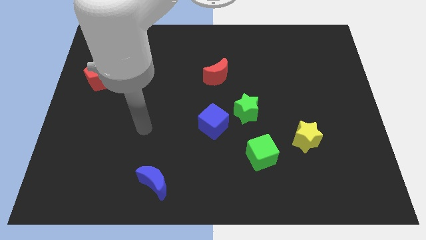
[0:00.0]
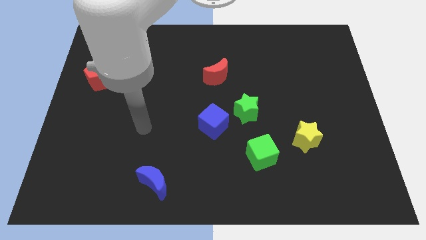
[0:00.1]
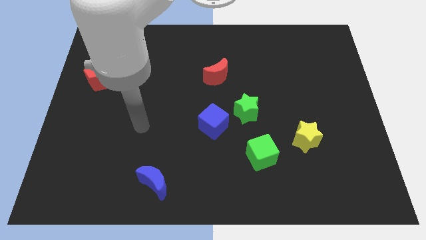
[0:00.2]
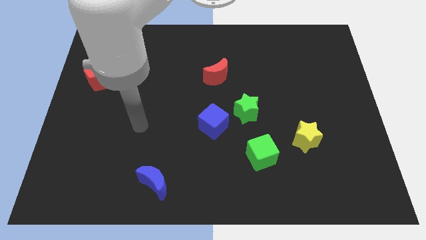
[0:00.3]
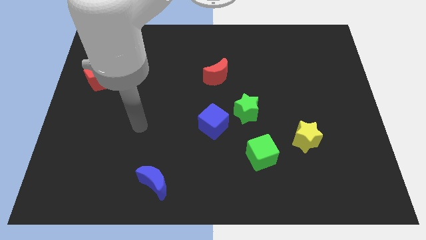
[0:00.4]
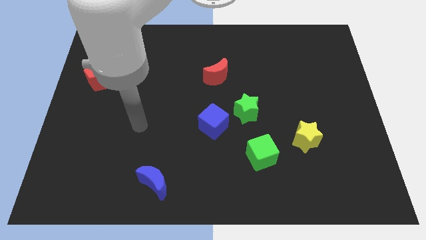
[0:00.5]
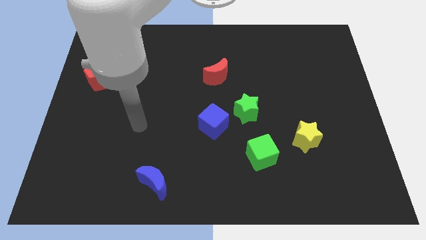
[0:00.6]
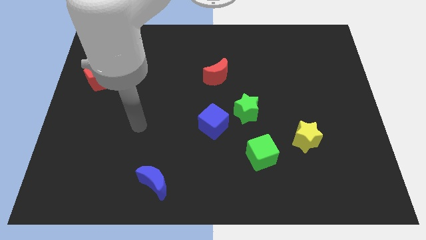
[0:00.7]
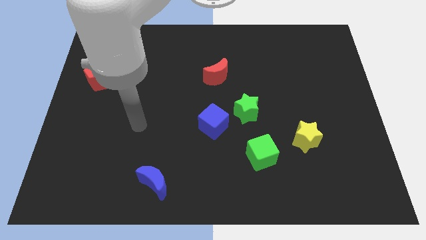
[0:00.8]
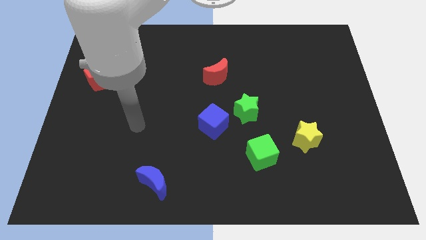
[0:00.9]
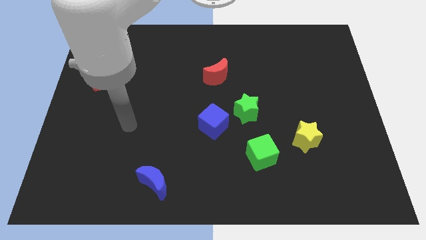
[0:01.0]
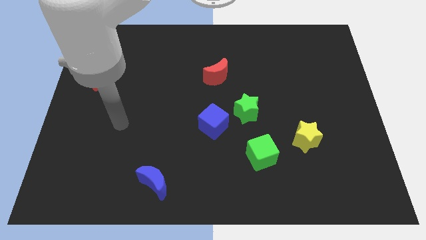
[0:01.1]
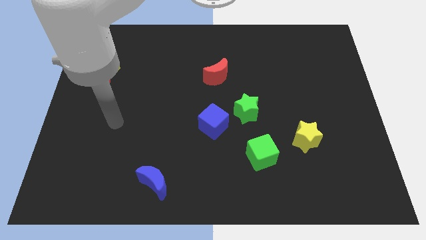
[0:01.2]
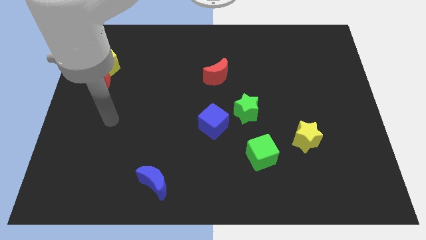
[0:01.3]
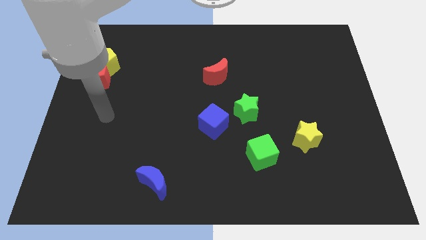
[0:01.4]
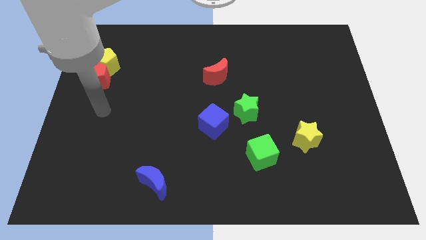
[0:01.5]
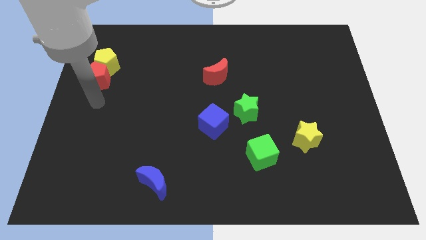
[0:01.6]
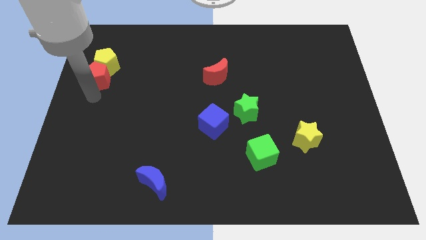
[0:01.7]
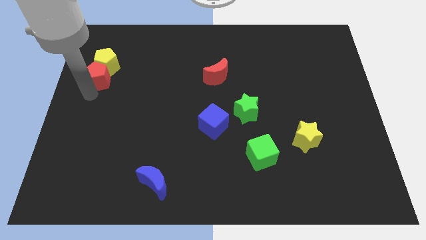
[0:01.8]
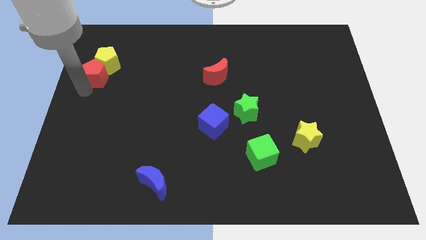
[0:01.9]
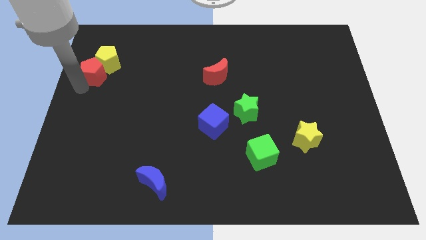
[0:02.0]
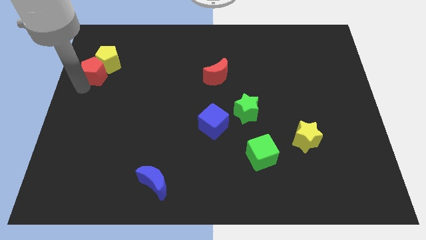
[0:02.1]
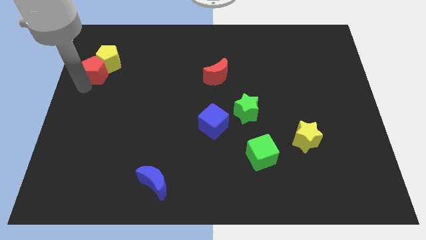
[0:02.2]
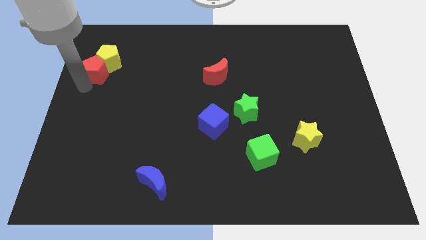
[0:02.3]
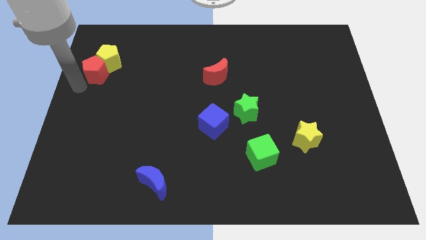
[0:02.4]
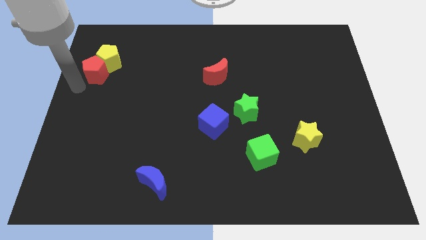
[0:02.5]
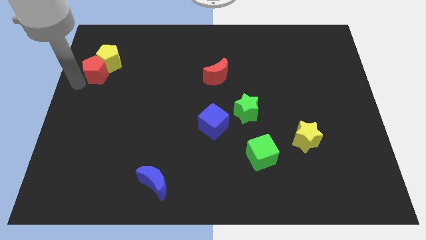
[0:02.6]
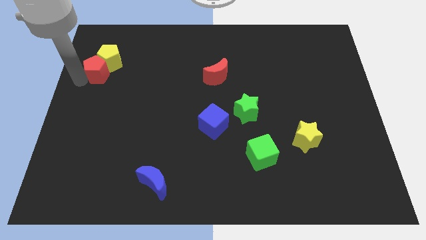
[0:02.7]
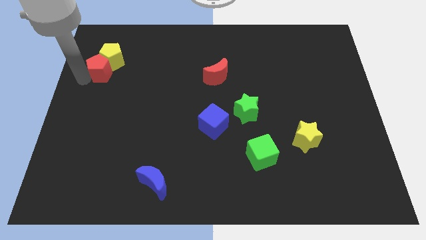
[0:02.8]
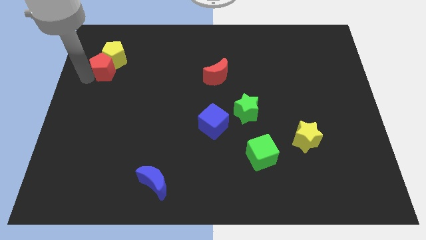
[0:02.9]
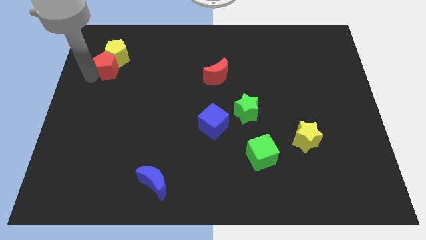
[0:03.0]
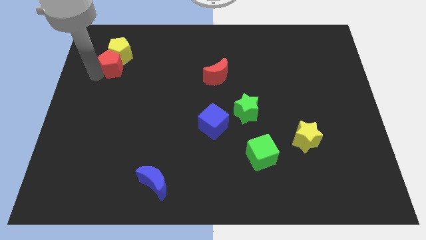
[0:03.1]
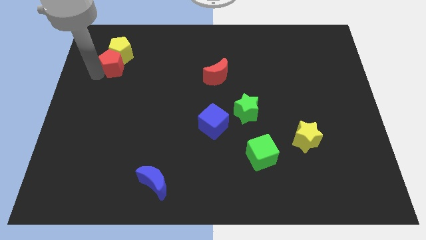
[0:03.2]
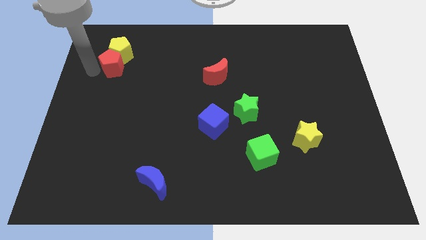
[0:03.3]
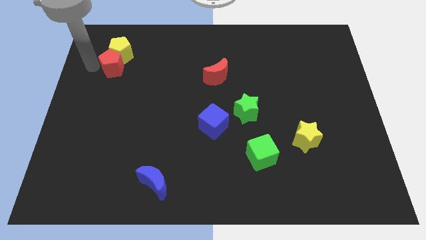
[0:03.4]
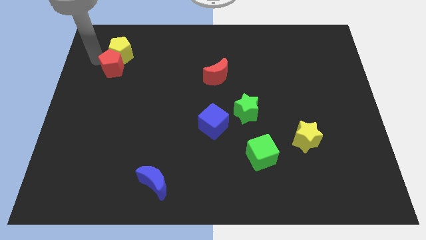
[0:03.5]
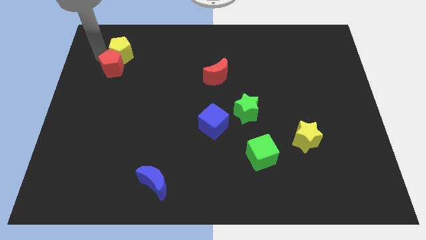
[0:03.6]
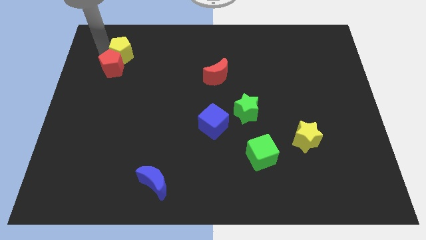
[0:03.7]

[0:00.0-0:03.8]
push the yellow pentagon with the red pentagon slightly to the top left of the board

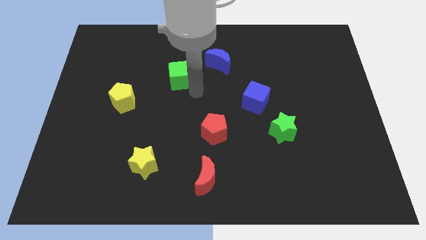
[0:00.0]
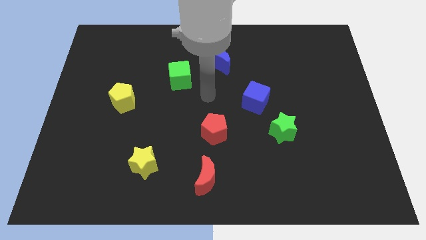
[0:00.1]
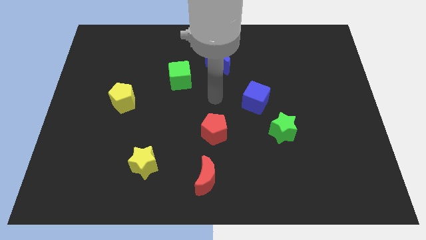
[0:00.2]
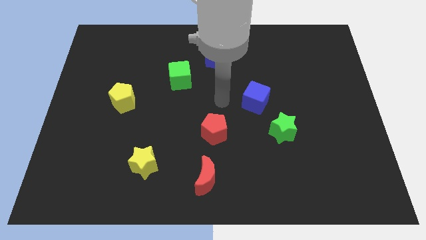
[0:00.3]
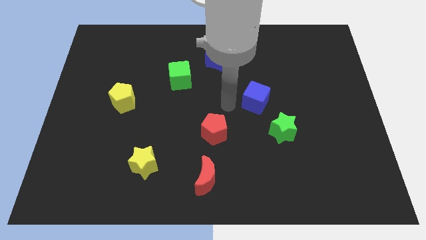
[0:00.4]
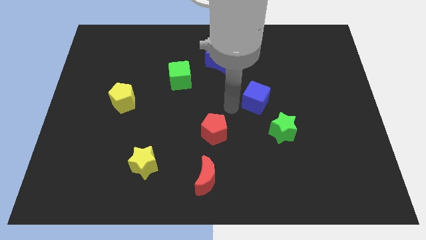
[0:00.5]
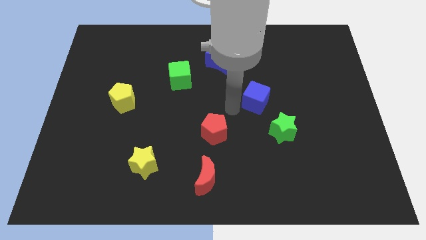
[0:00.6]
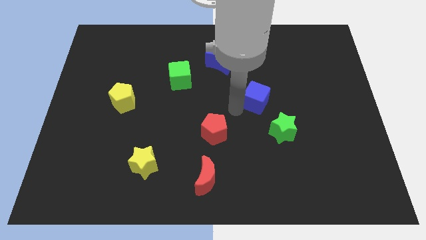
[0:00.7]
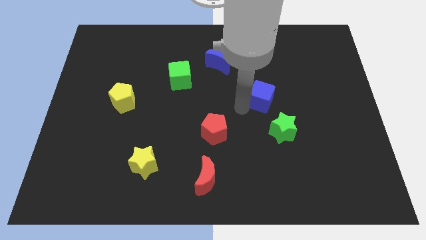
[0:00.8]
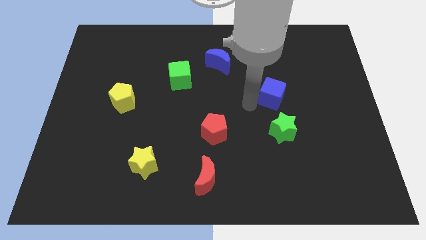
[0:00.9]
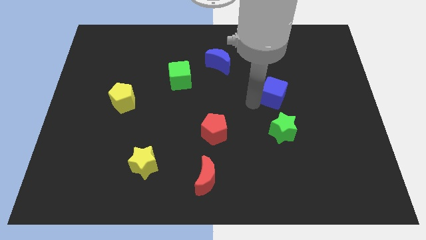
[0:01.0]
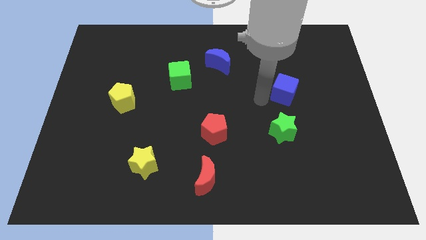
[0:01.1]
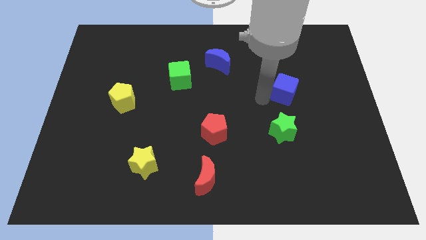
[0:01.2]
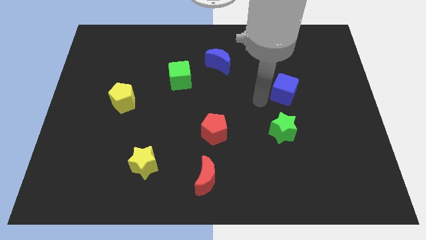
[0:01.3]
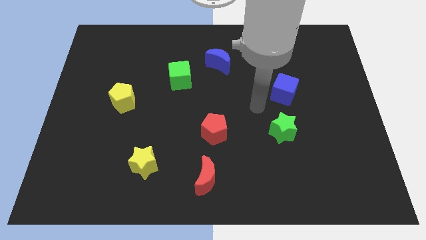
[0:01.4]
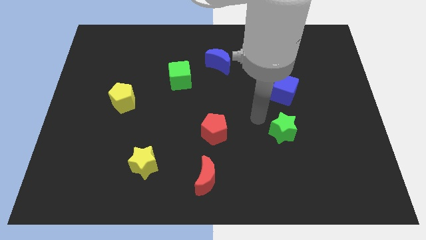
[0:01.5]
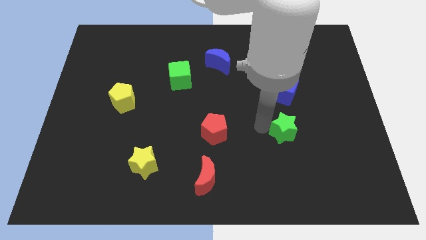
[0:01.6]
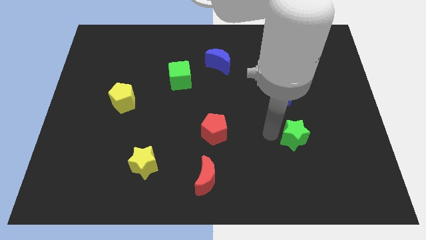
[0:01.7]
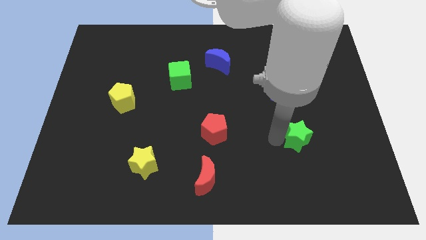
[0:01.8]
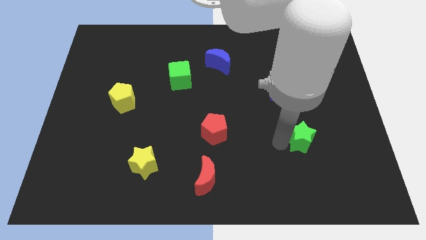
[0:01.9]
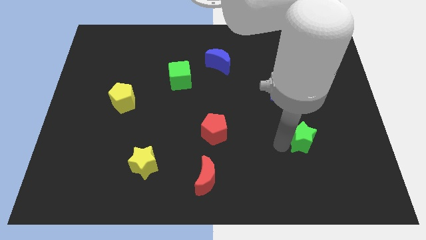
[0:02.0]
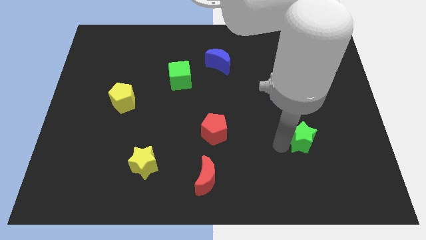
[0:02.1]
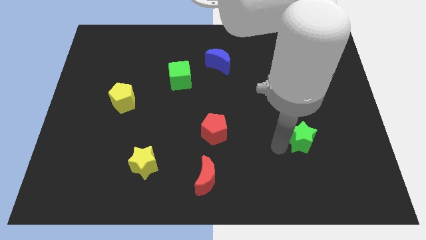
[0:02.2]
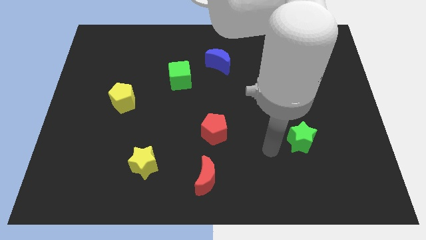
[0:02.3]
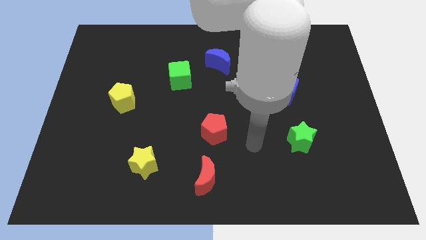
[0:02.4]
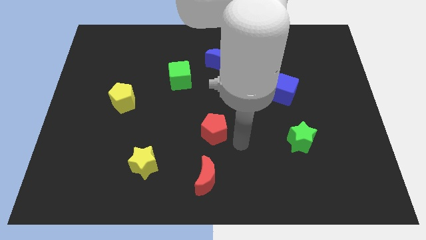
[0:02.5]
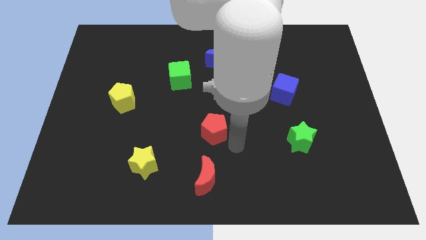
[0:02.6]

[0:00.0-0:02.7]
place blue cube to the top of green star

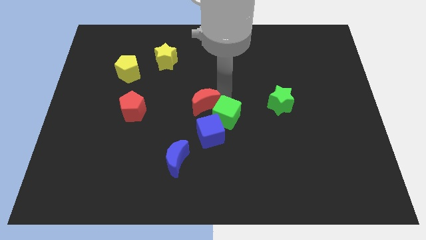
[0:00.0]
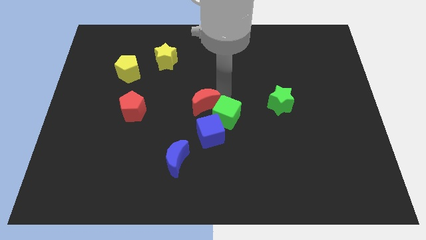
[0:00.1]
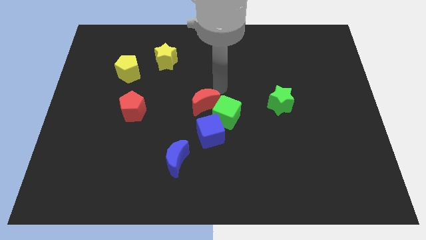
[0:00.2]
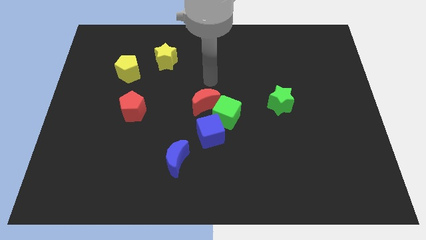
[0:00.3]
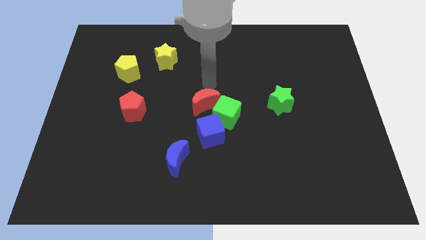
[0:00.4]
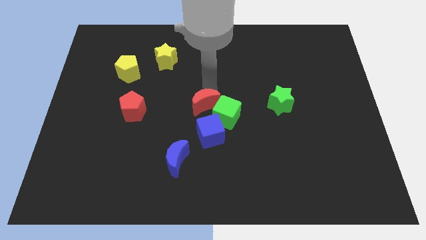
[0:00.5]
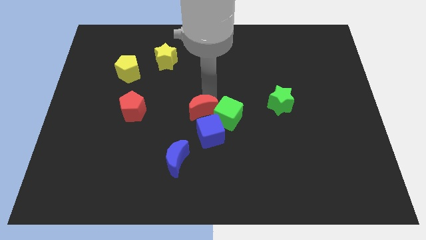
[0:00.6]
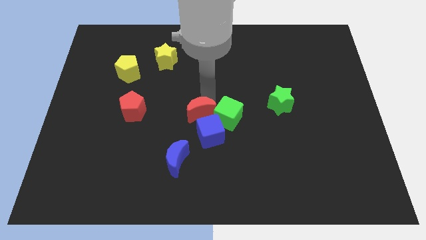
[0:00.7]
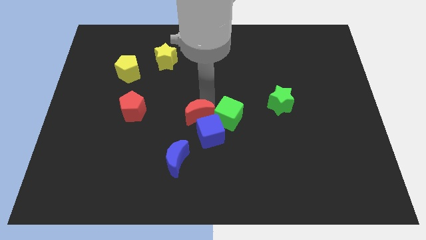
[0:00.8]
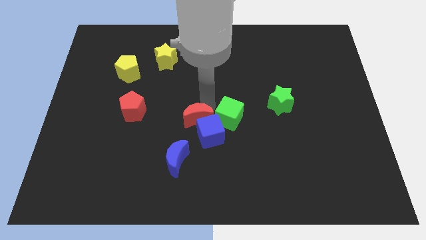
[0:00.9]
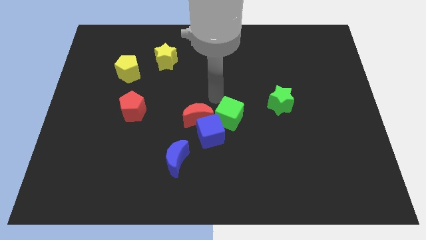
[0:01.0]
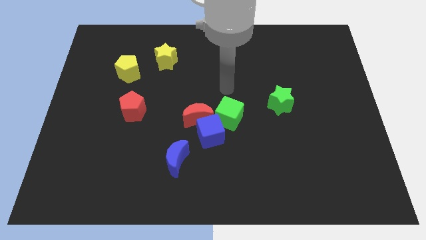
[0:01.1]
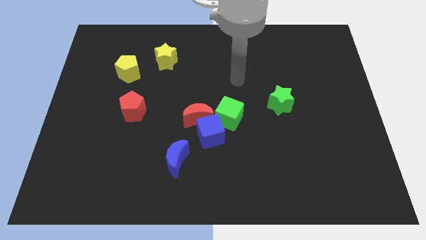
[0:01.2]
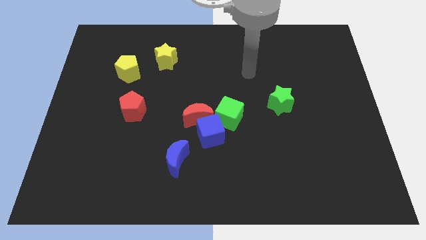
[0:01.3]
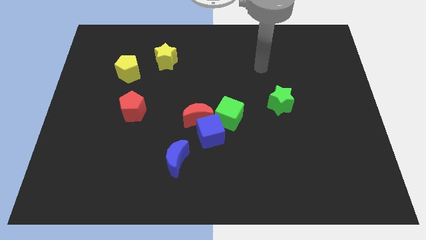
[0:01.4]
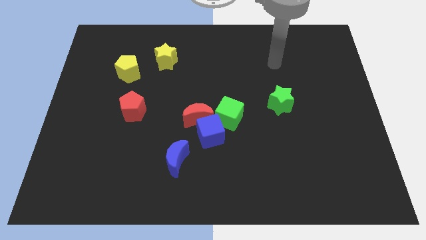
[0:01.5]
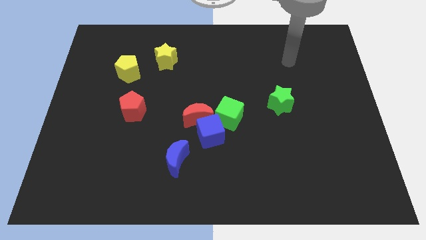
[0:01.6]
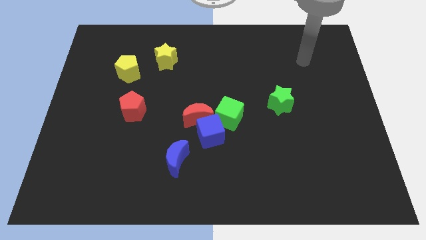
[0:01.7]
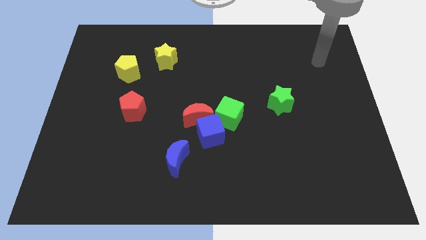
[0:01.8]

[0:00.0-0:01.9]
push red moon into blue cube

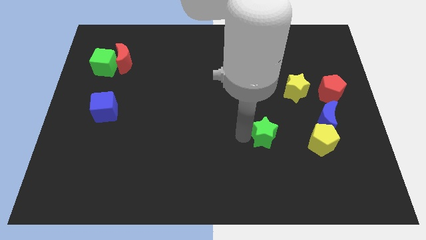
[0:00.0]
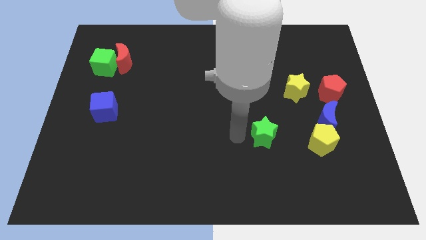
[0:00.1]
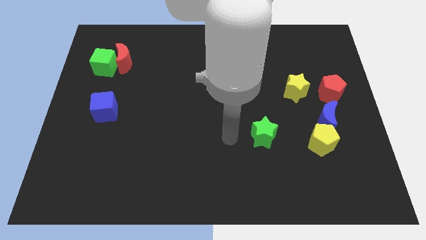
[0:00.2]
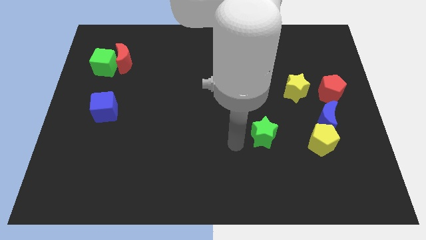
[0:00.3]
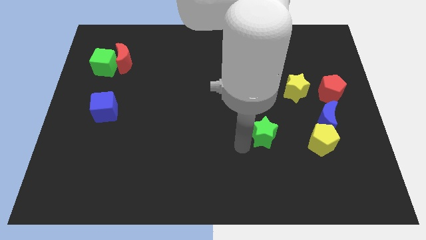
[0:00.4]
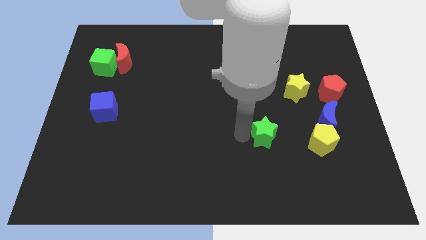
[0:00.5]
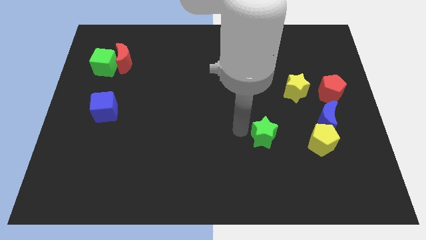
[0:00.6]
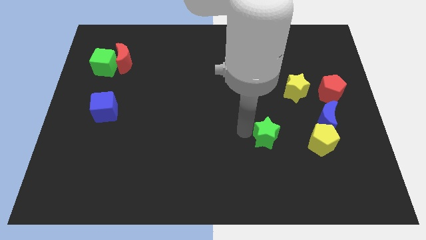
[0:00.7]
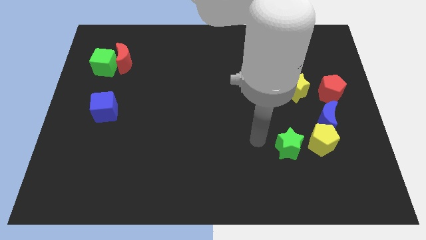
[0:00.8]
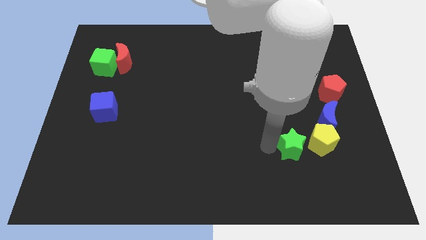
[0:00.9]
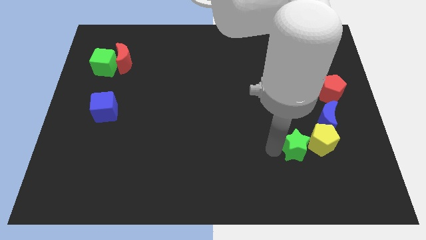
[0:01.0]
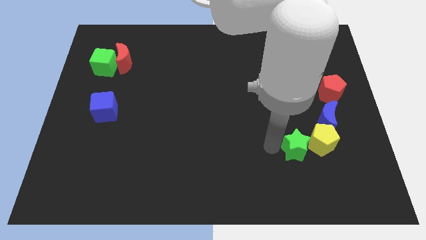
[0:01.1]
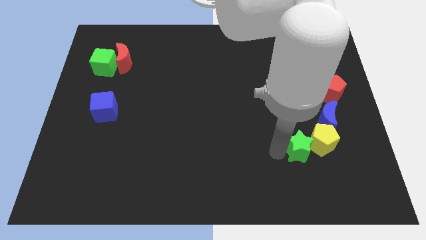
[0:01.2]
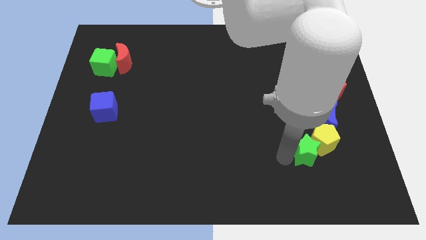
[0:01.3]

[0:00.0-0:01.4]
push the green star into the yellow pentagon
